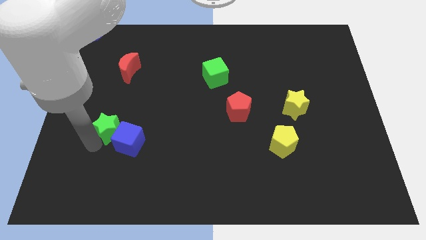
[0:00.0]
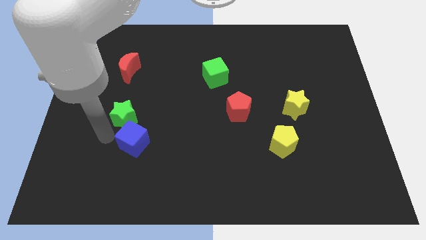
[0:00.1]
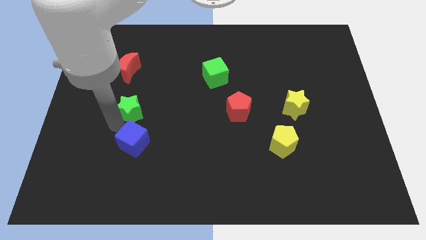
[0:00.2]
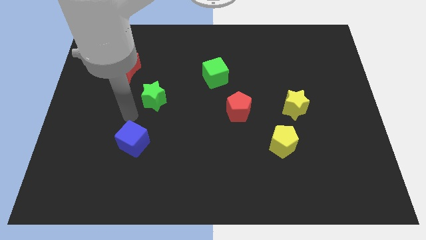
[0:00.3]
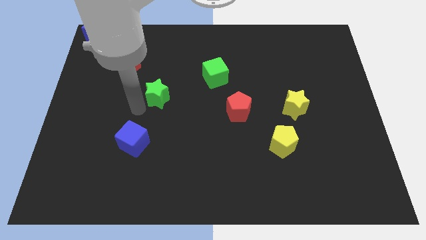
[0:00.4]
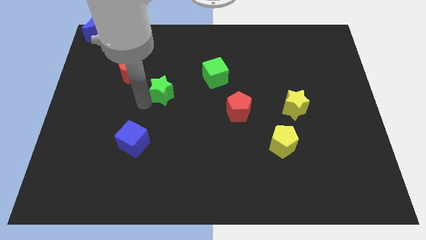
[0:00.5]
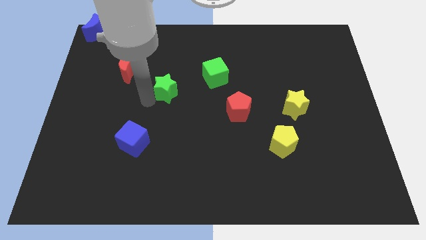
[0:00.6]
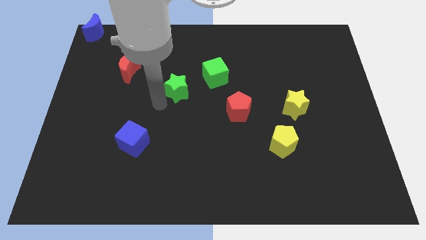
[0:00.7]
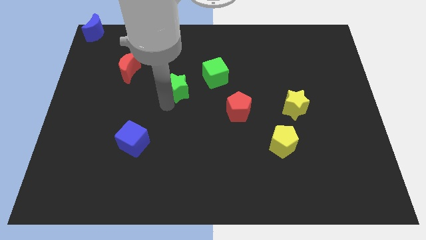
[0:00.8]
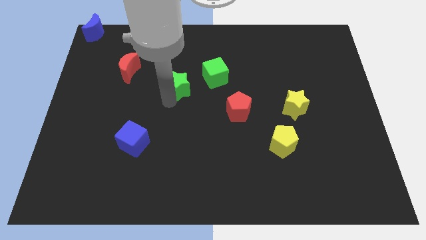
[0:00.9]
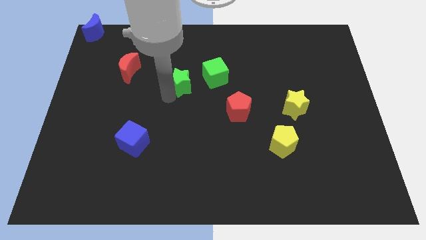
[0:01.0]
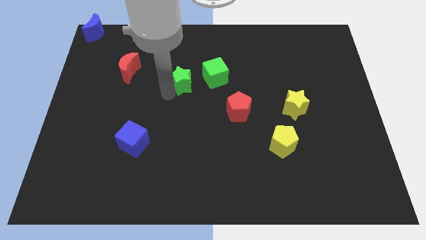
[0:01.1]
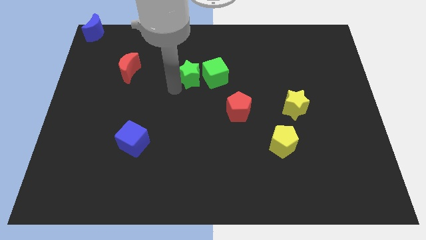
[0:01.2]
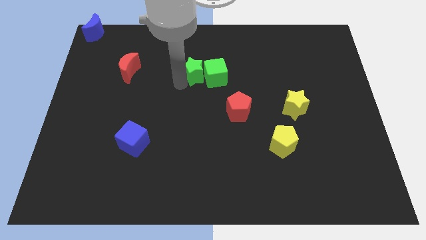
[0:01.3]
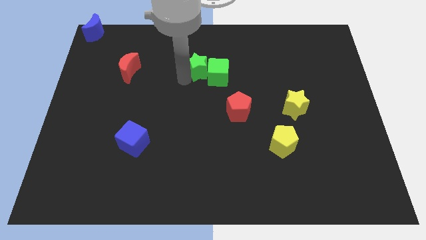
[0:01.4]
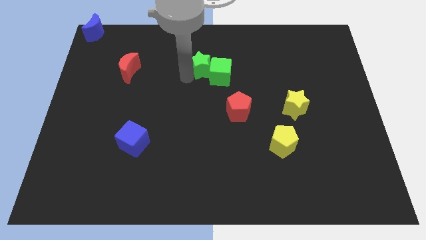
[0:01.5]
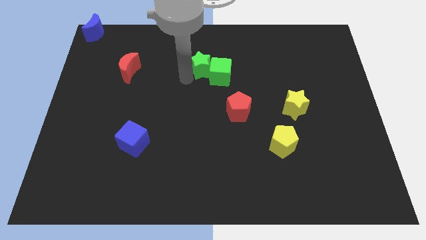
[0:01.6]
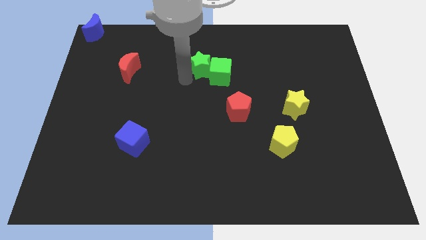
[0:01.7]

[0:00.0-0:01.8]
place the green star to the left of the green cube

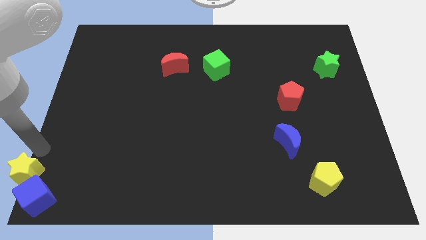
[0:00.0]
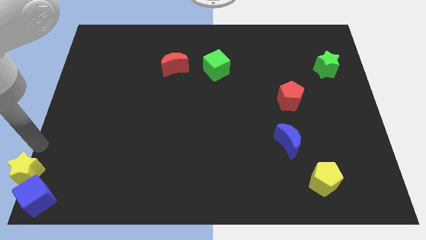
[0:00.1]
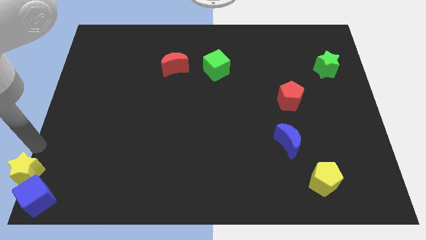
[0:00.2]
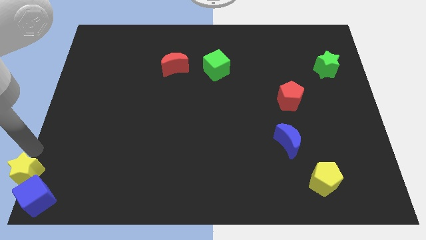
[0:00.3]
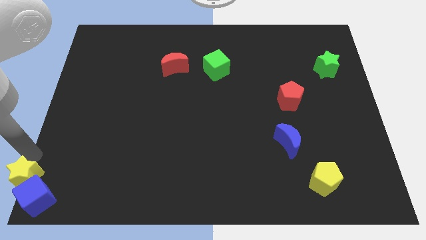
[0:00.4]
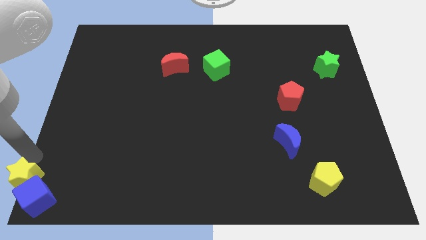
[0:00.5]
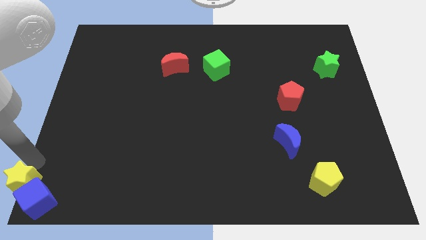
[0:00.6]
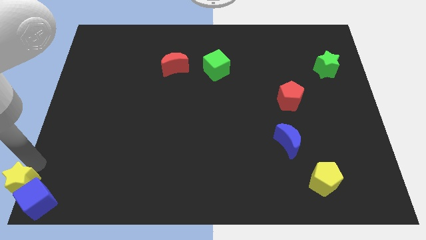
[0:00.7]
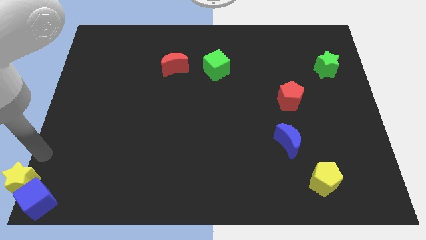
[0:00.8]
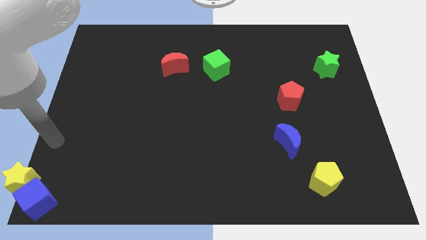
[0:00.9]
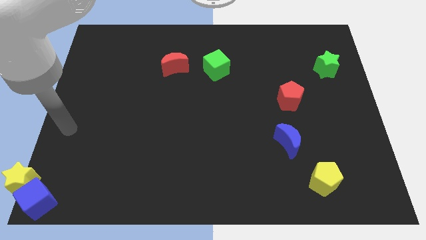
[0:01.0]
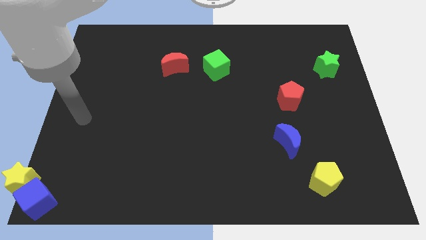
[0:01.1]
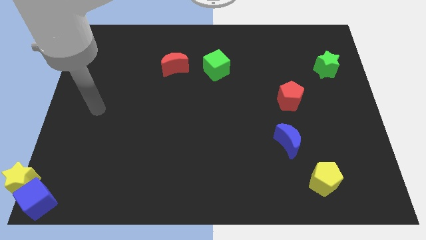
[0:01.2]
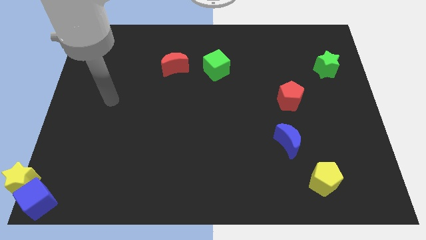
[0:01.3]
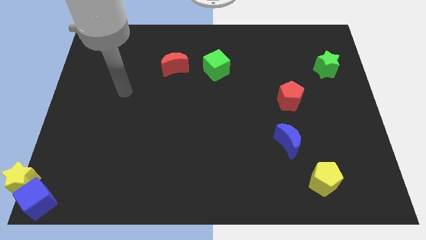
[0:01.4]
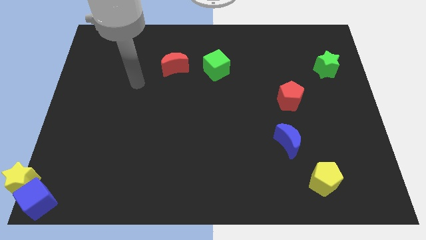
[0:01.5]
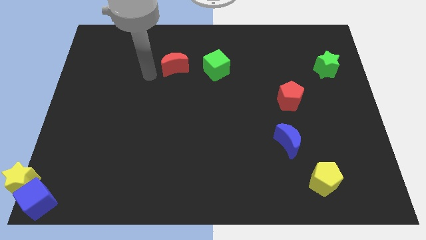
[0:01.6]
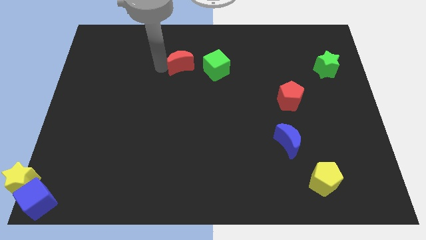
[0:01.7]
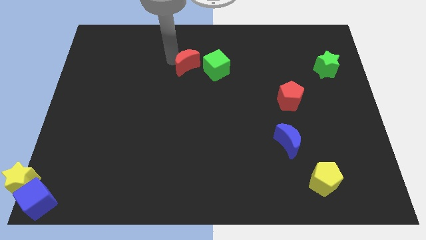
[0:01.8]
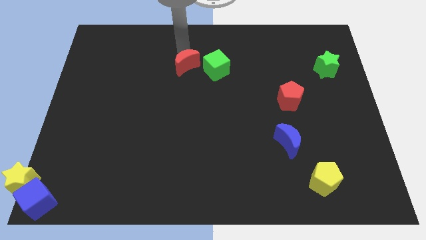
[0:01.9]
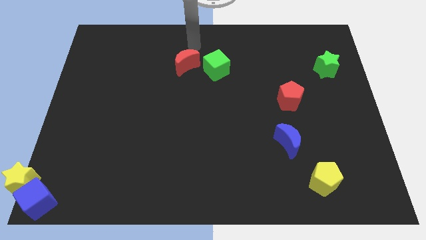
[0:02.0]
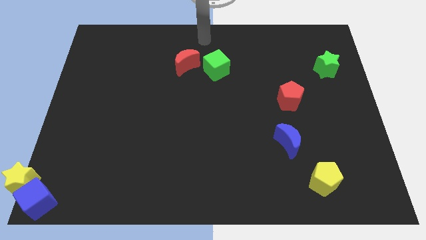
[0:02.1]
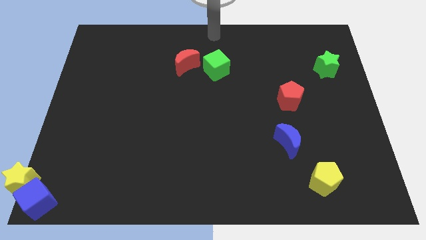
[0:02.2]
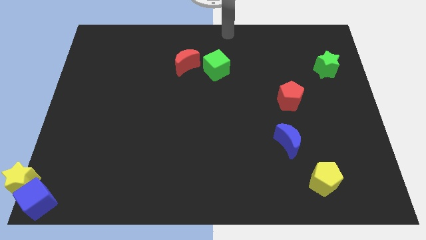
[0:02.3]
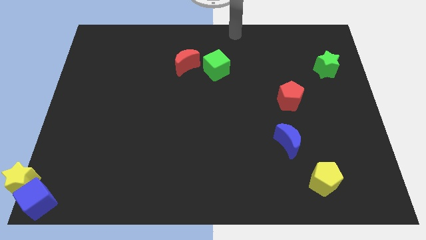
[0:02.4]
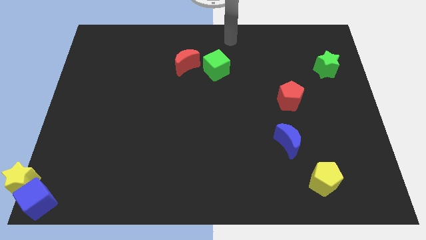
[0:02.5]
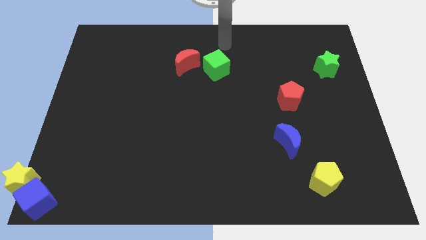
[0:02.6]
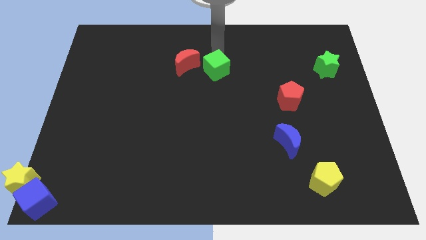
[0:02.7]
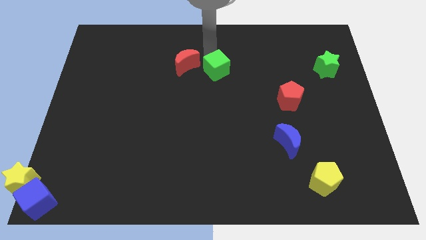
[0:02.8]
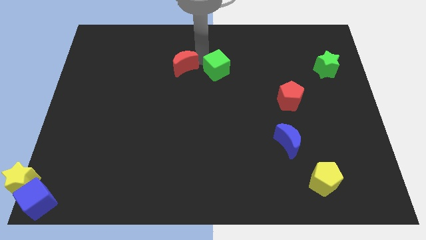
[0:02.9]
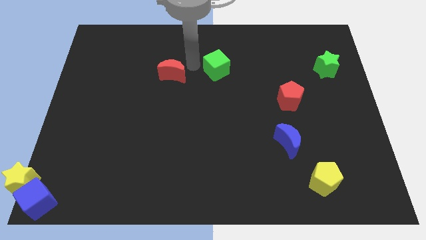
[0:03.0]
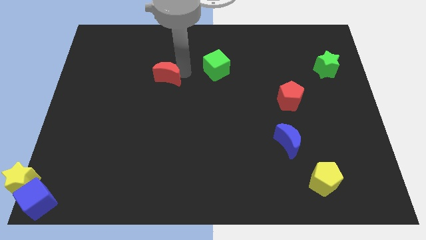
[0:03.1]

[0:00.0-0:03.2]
place the red moon left to the green cube

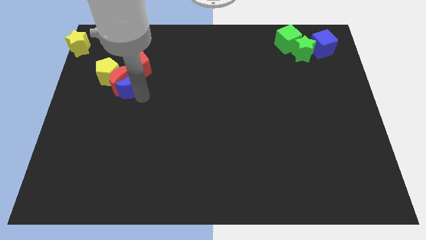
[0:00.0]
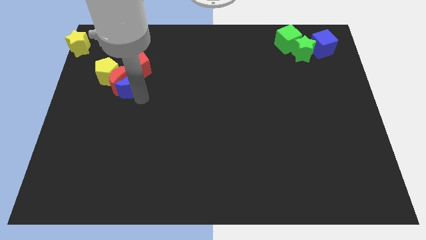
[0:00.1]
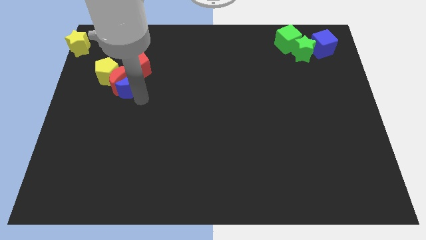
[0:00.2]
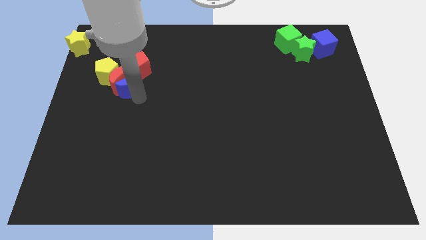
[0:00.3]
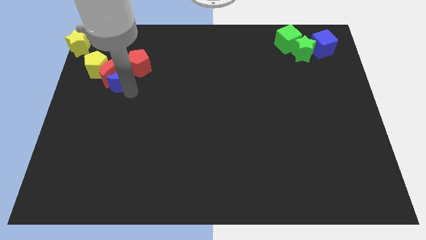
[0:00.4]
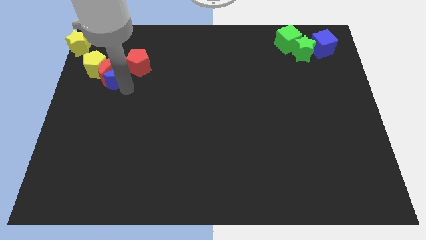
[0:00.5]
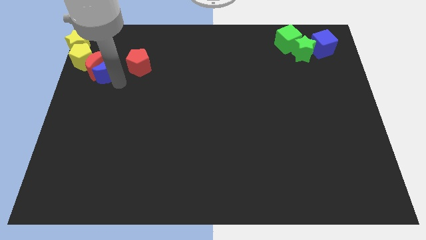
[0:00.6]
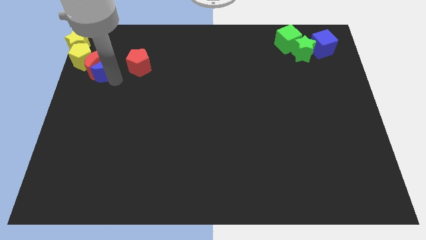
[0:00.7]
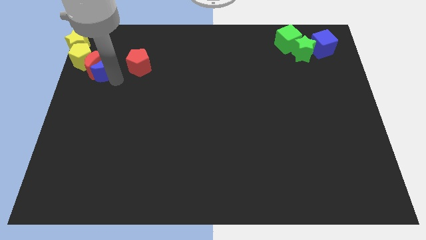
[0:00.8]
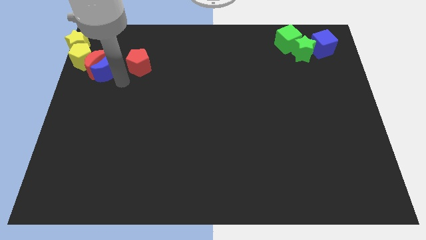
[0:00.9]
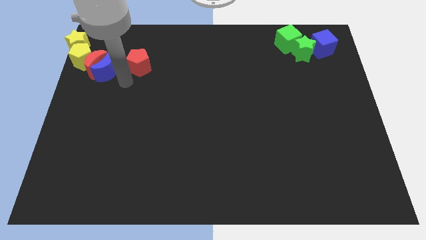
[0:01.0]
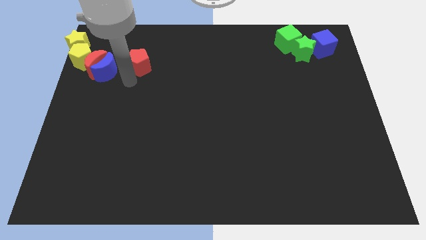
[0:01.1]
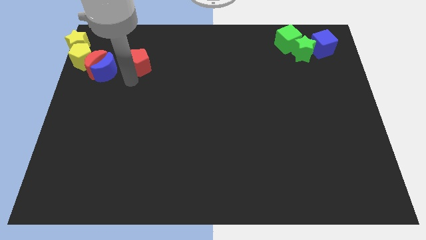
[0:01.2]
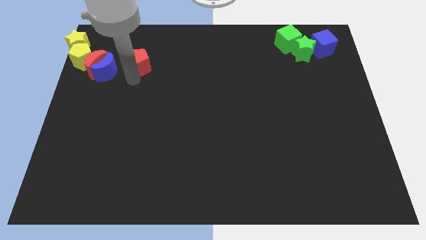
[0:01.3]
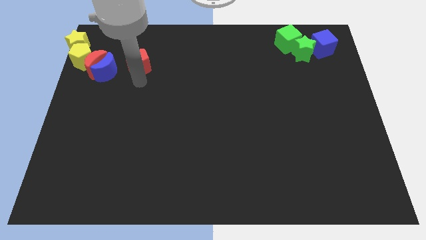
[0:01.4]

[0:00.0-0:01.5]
move the yellow pentagonred and blue crescent daigonally below the yellow star

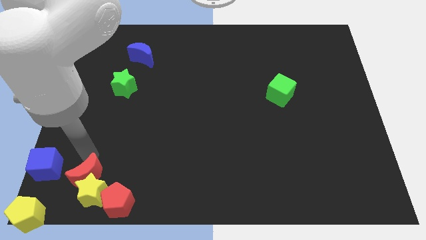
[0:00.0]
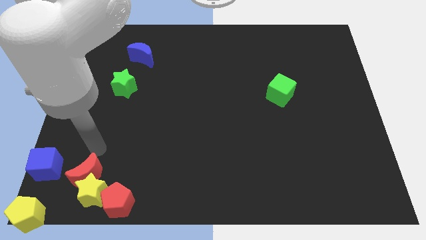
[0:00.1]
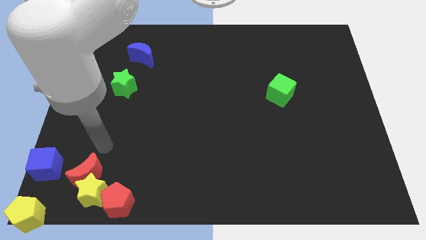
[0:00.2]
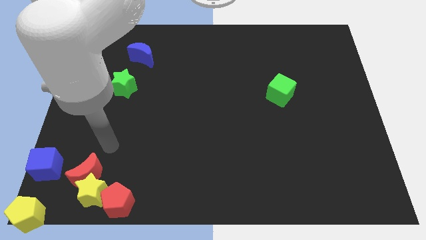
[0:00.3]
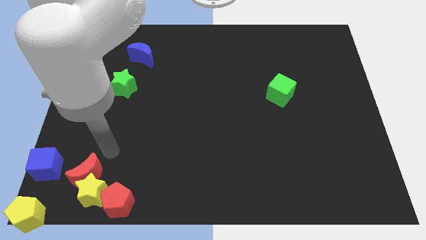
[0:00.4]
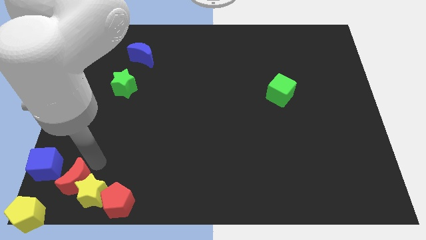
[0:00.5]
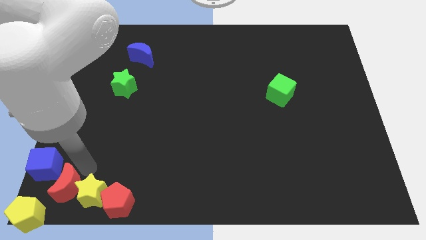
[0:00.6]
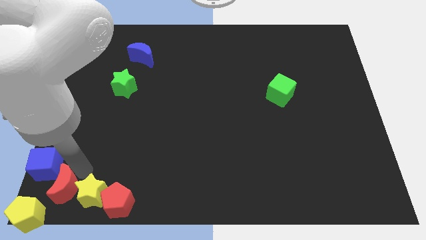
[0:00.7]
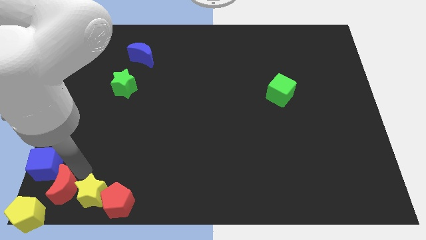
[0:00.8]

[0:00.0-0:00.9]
place red moon to the left of the yellow star

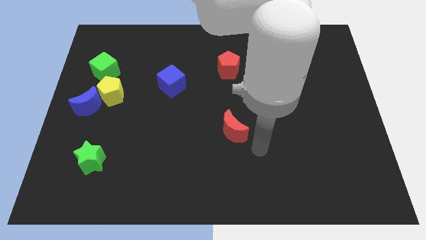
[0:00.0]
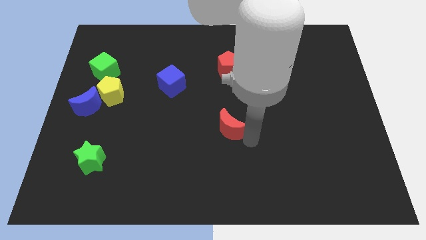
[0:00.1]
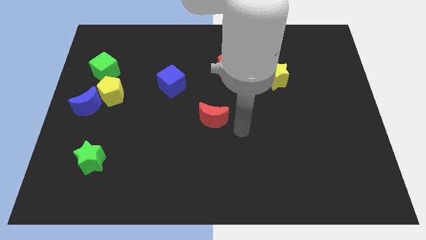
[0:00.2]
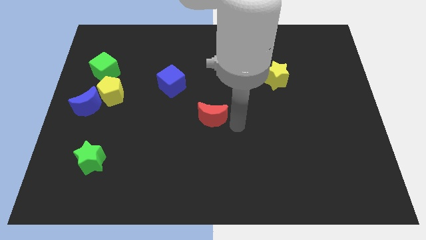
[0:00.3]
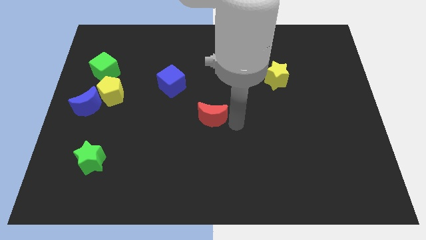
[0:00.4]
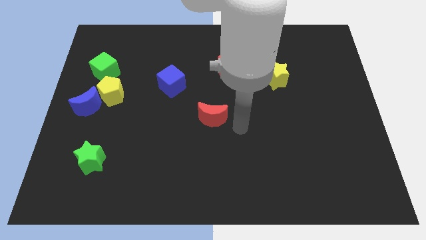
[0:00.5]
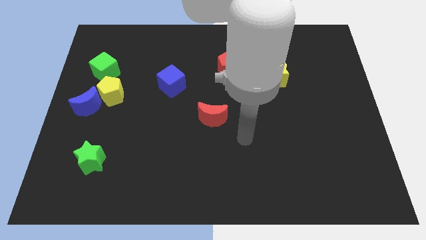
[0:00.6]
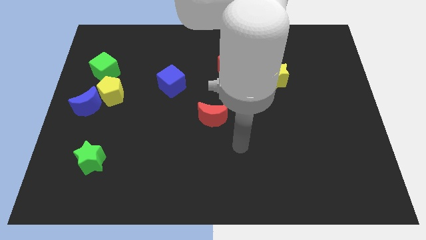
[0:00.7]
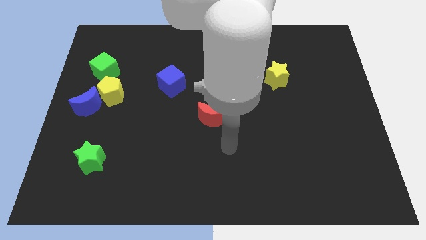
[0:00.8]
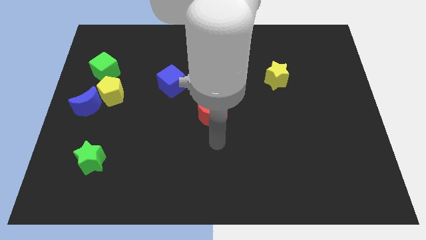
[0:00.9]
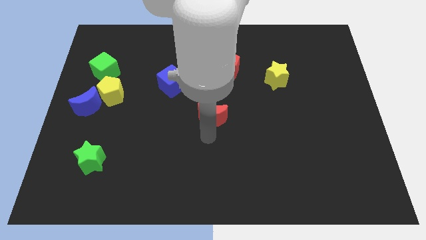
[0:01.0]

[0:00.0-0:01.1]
put the red moon diagonally to blue cube

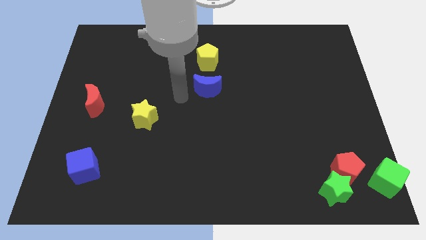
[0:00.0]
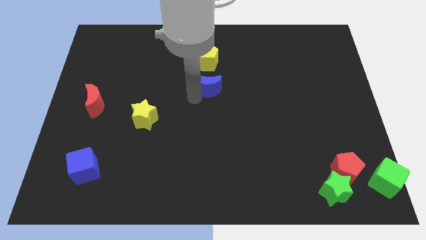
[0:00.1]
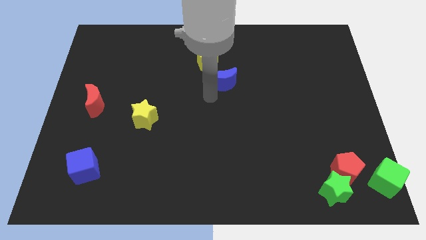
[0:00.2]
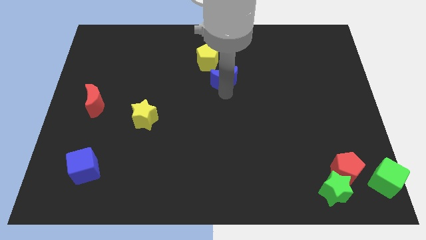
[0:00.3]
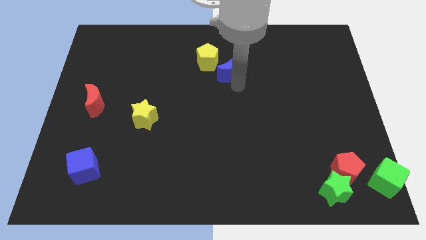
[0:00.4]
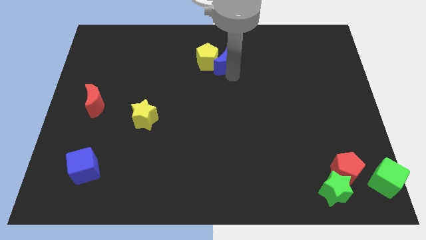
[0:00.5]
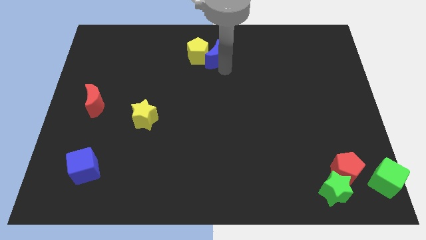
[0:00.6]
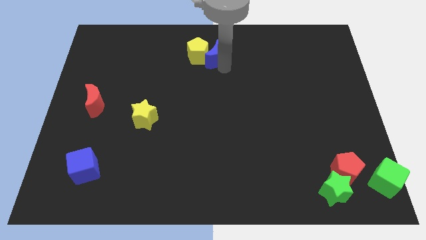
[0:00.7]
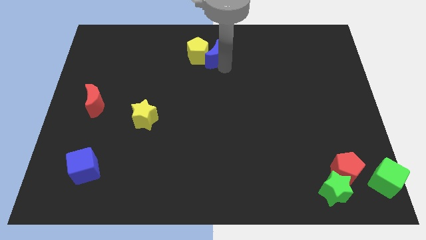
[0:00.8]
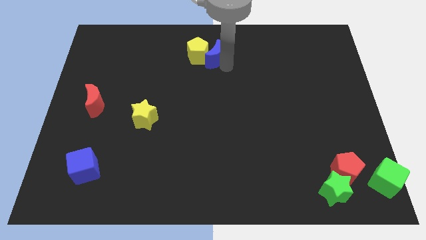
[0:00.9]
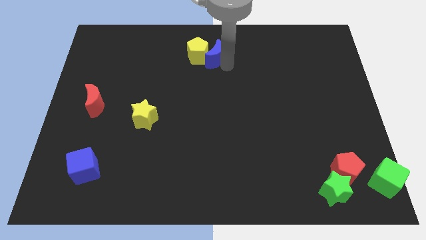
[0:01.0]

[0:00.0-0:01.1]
push the blue crescent close to the yellow pentagon
